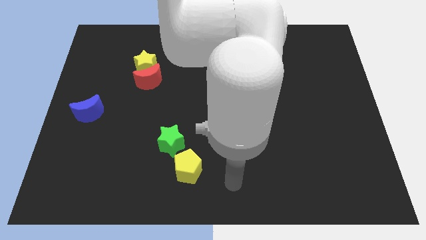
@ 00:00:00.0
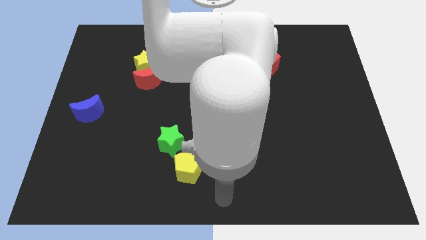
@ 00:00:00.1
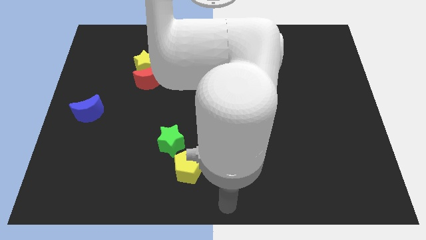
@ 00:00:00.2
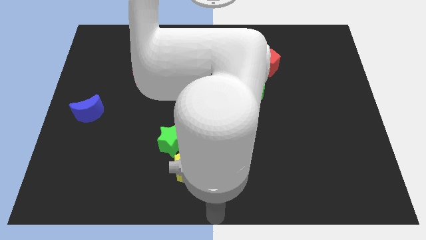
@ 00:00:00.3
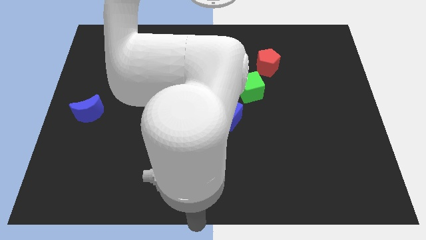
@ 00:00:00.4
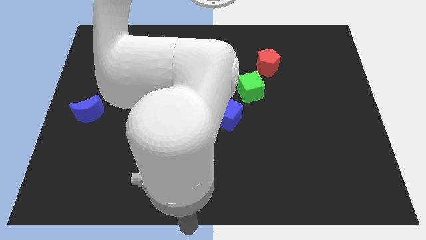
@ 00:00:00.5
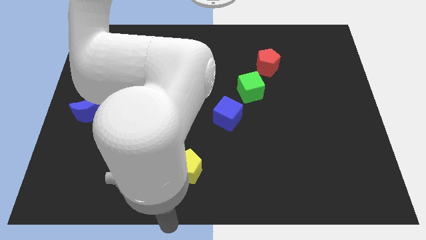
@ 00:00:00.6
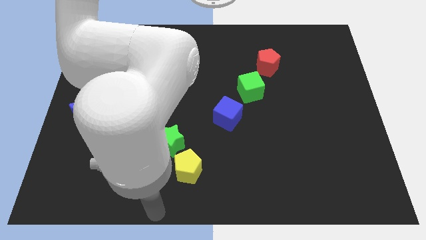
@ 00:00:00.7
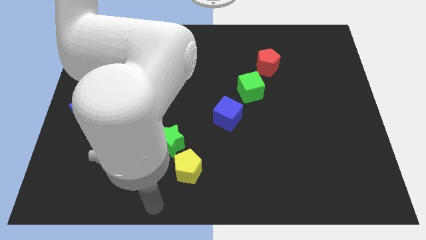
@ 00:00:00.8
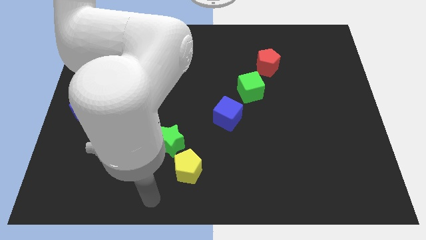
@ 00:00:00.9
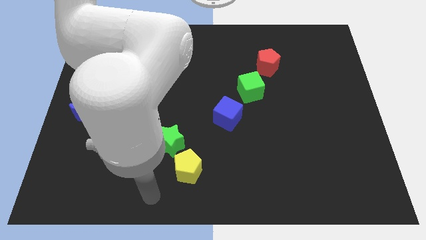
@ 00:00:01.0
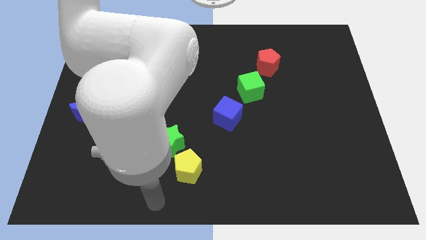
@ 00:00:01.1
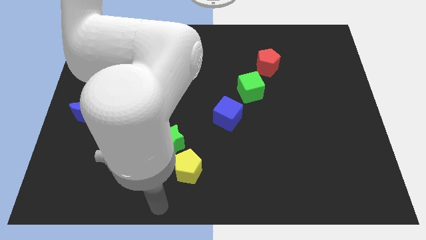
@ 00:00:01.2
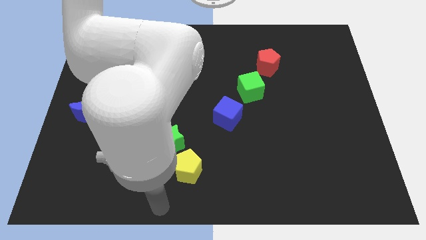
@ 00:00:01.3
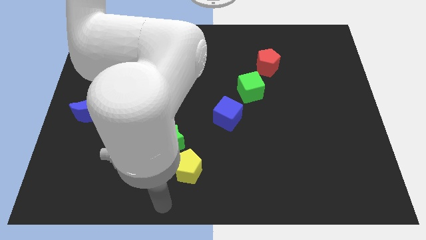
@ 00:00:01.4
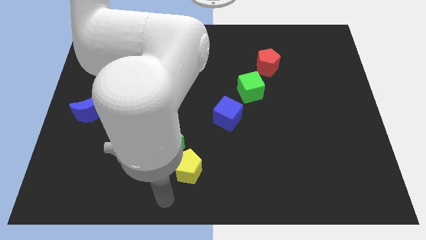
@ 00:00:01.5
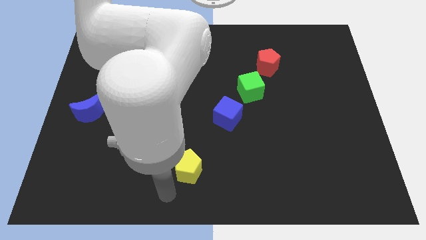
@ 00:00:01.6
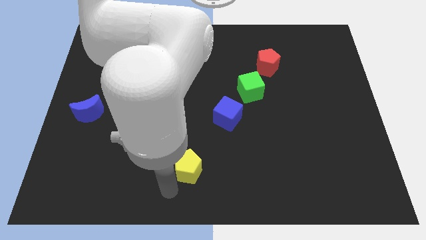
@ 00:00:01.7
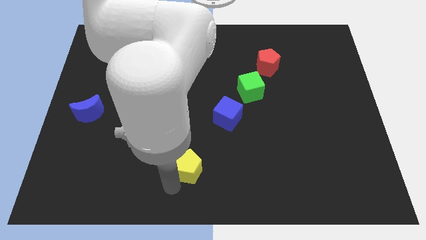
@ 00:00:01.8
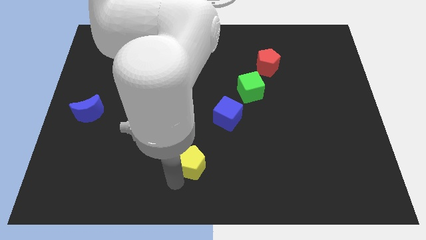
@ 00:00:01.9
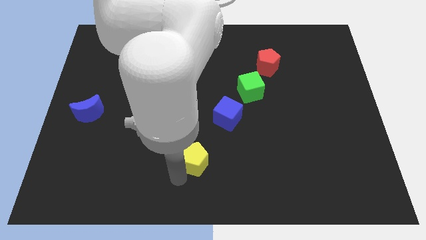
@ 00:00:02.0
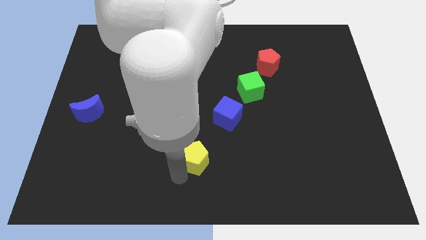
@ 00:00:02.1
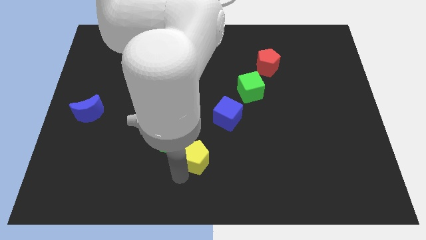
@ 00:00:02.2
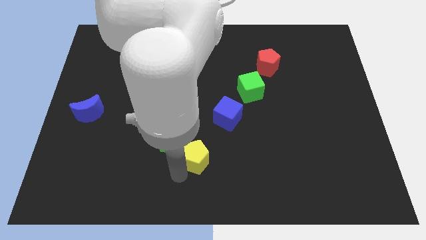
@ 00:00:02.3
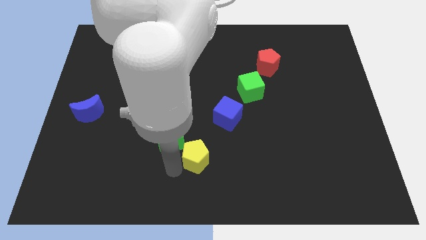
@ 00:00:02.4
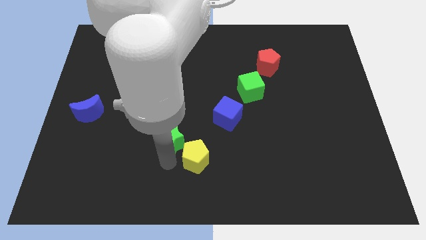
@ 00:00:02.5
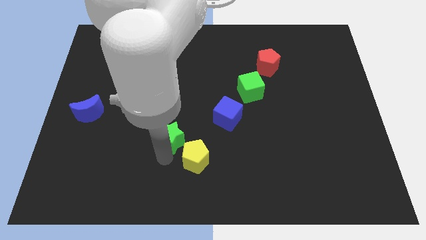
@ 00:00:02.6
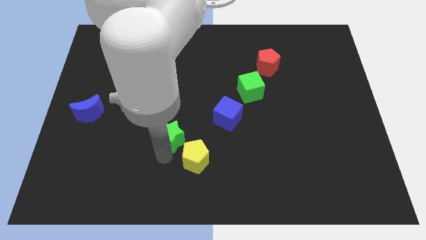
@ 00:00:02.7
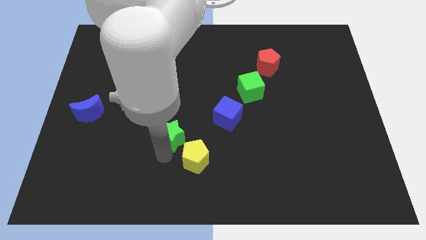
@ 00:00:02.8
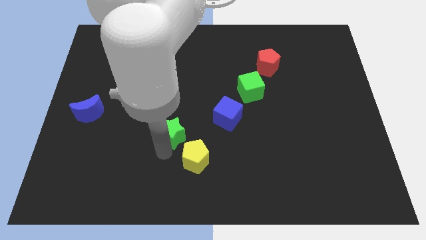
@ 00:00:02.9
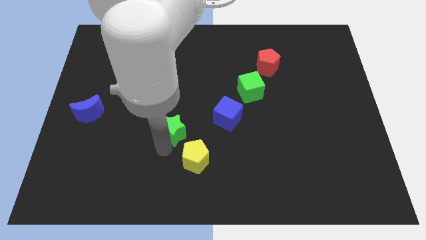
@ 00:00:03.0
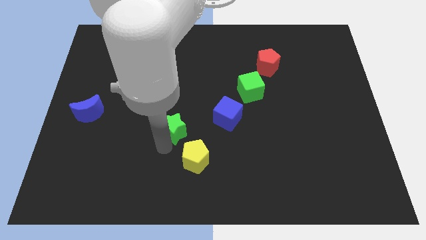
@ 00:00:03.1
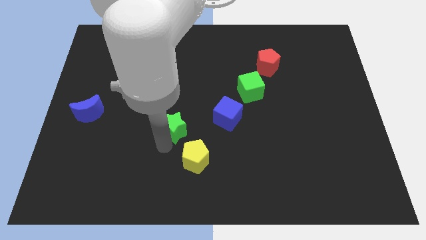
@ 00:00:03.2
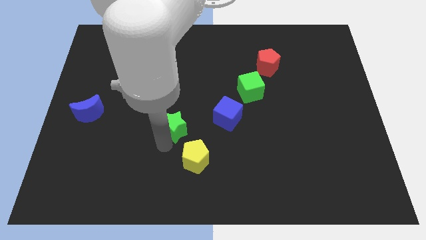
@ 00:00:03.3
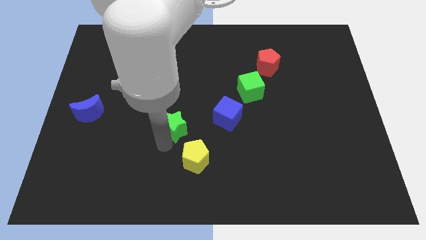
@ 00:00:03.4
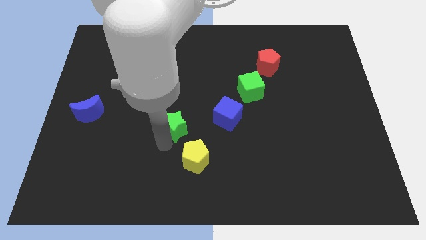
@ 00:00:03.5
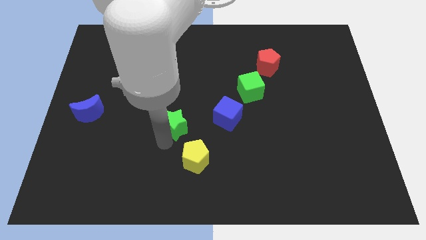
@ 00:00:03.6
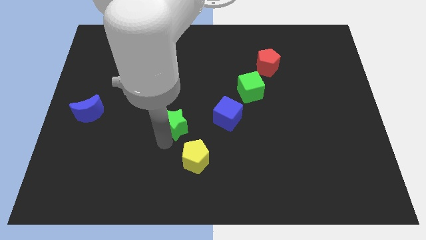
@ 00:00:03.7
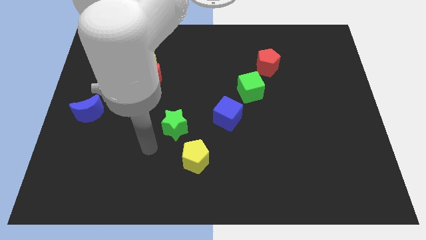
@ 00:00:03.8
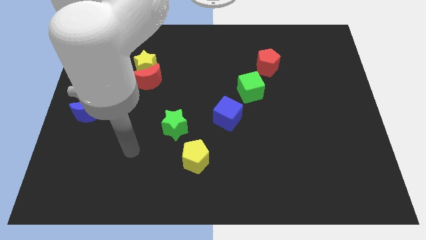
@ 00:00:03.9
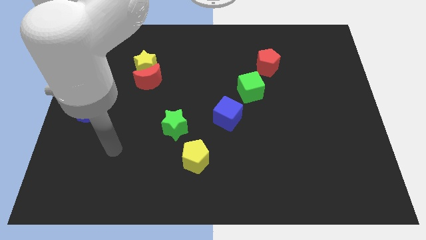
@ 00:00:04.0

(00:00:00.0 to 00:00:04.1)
push the yellow pentagon and green star towards the blue cube to form a diagnoal line

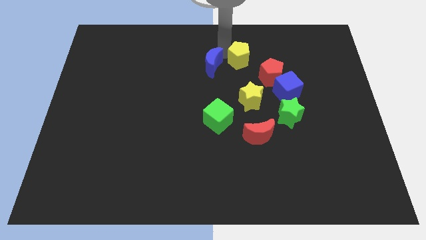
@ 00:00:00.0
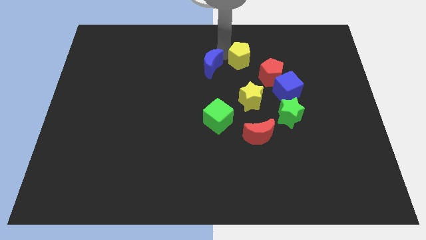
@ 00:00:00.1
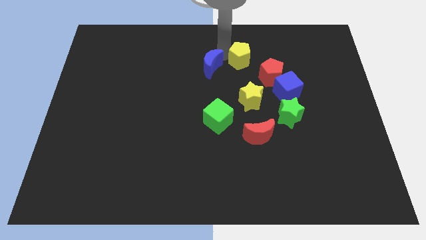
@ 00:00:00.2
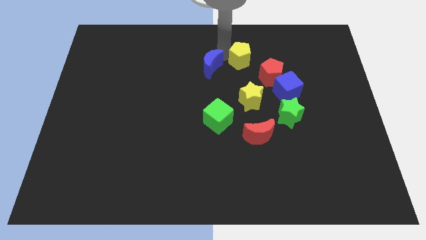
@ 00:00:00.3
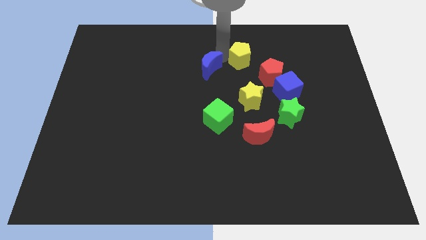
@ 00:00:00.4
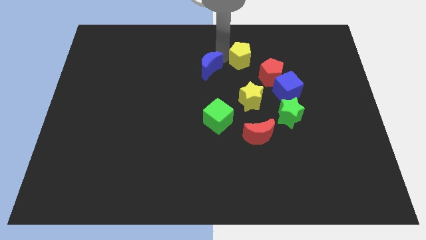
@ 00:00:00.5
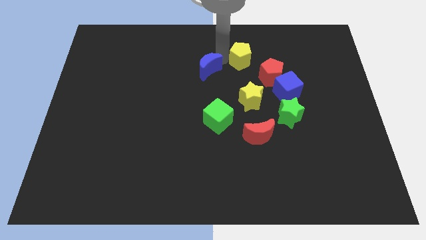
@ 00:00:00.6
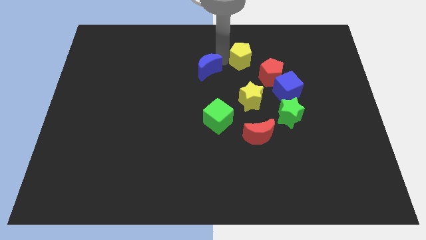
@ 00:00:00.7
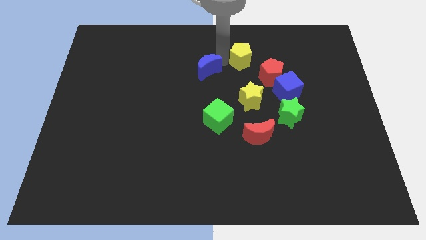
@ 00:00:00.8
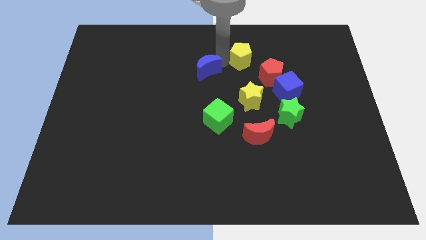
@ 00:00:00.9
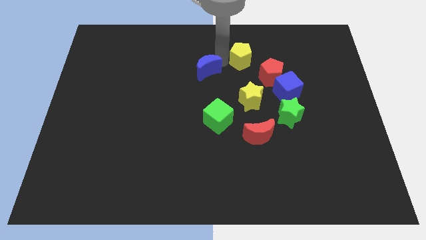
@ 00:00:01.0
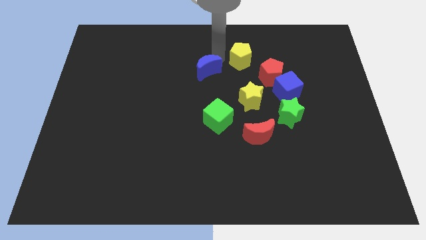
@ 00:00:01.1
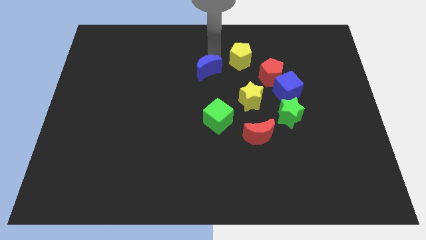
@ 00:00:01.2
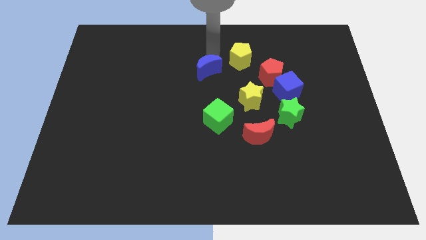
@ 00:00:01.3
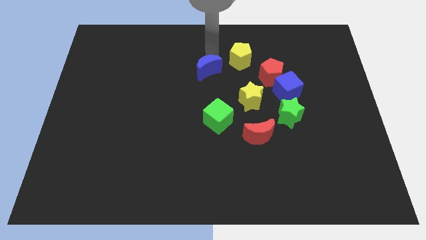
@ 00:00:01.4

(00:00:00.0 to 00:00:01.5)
separate the yellow pentagon and the blue moon

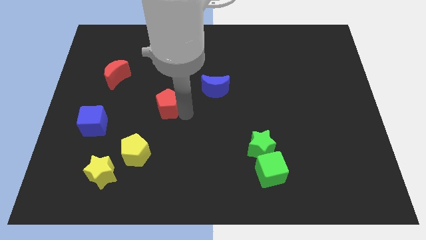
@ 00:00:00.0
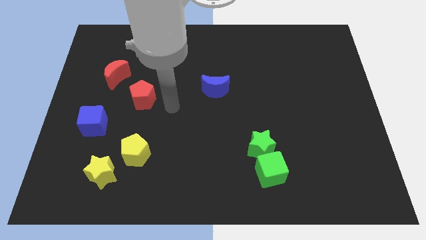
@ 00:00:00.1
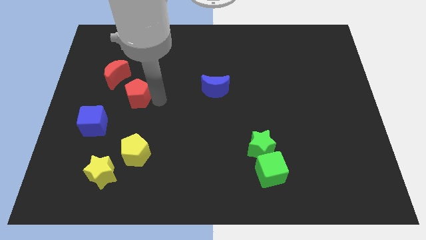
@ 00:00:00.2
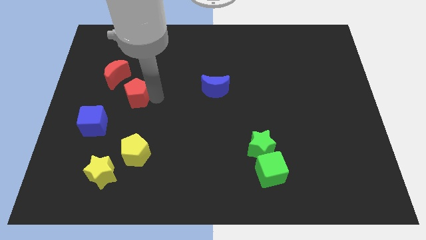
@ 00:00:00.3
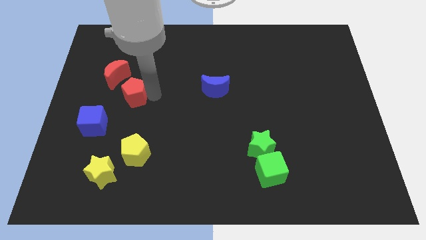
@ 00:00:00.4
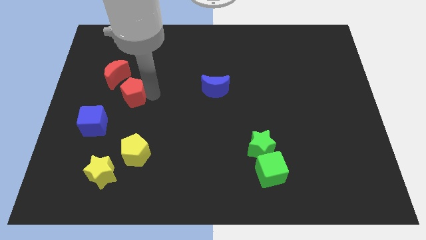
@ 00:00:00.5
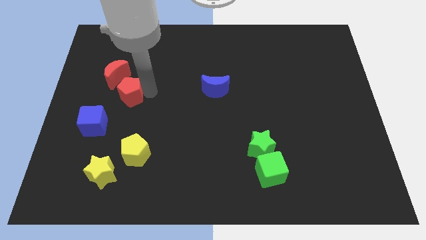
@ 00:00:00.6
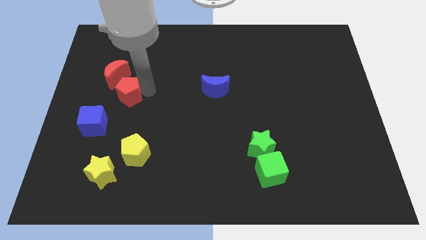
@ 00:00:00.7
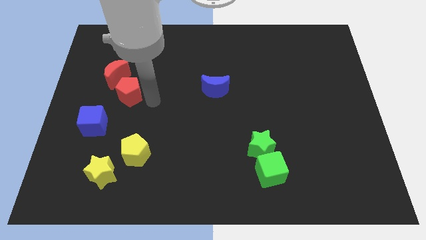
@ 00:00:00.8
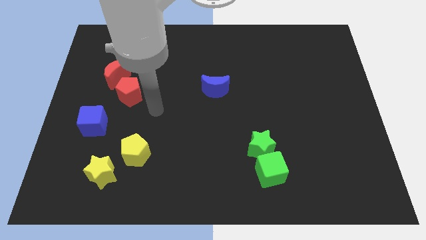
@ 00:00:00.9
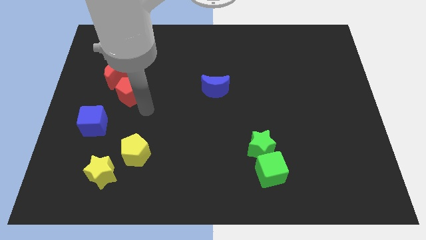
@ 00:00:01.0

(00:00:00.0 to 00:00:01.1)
place the red pentagon close to the red crescent

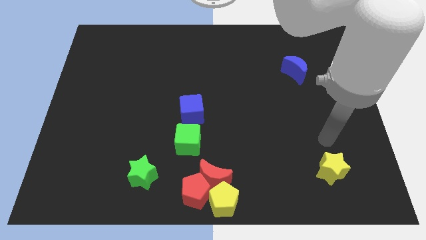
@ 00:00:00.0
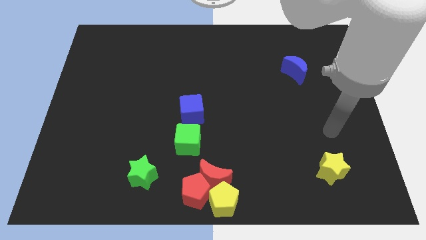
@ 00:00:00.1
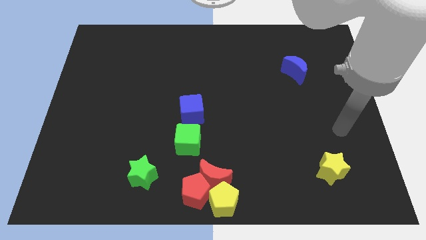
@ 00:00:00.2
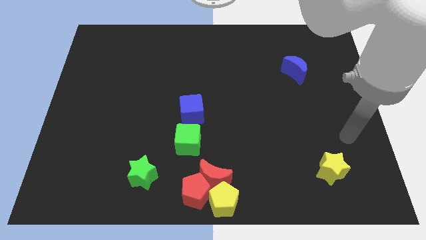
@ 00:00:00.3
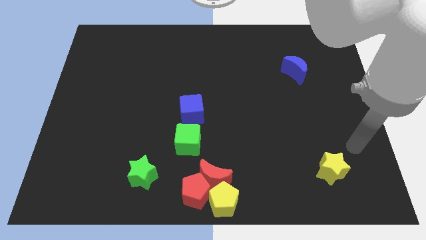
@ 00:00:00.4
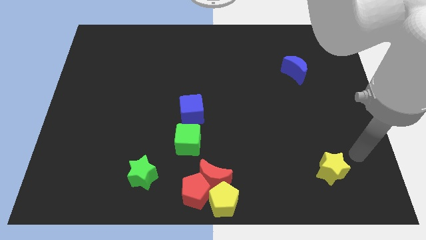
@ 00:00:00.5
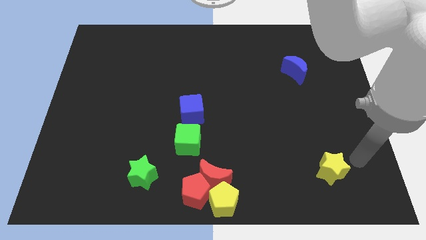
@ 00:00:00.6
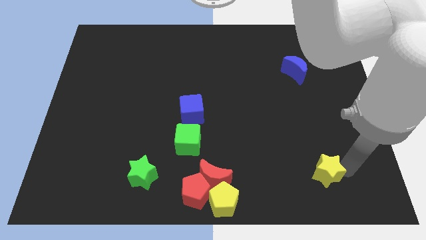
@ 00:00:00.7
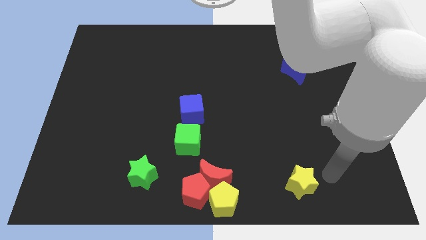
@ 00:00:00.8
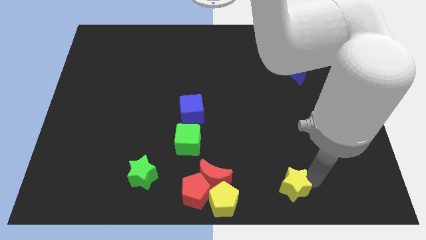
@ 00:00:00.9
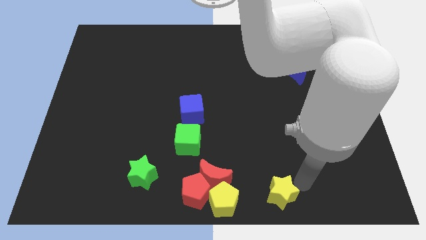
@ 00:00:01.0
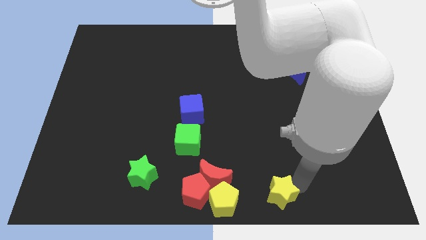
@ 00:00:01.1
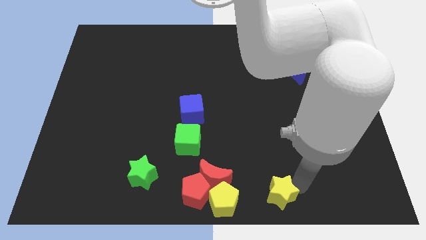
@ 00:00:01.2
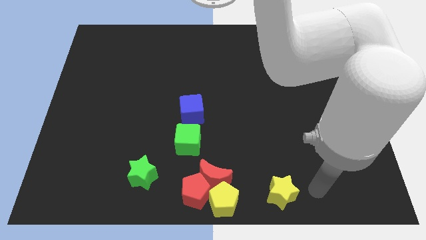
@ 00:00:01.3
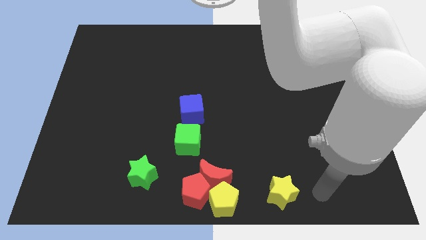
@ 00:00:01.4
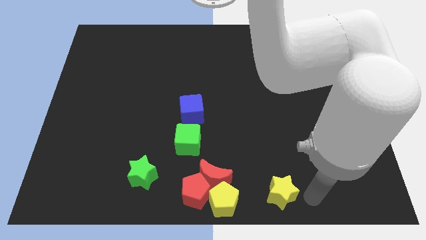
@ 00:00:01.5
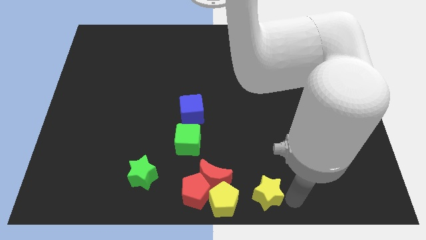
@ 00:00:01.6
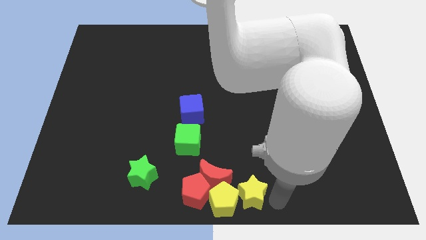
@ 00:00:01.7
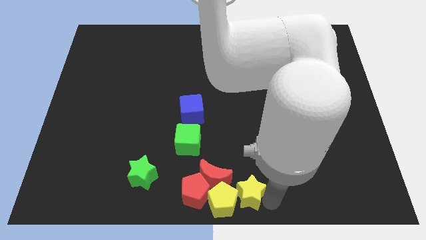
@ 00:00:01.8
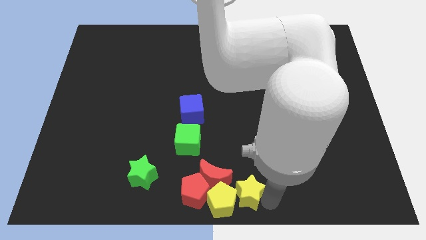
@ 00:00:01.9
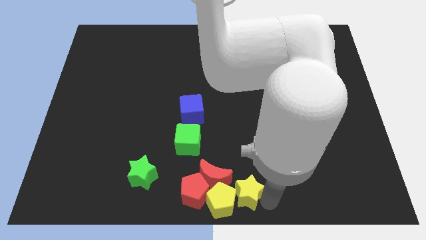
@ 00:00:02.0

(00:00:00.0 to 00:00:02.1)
push the yellow star towards the yellow pentagon

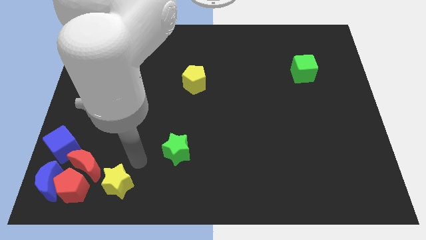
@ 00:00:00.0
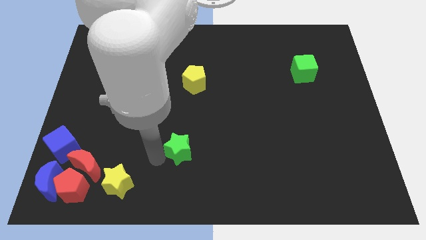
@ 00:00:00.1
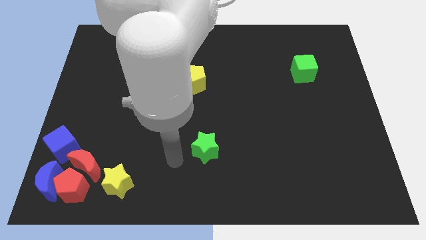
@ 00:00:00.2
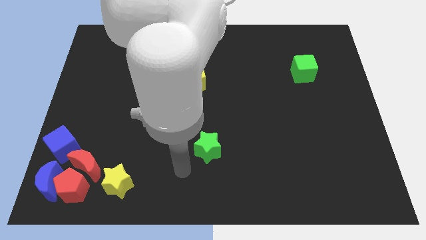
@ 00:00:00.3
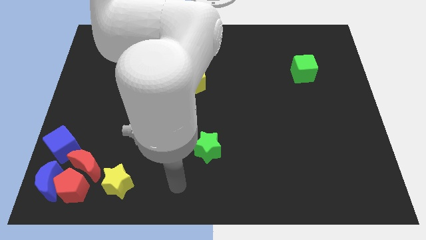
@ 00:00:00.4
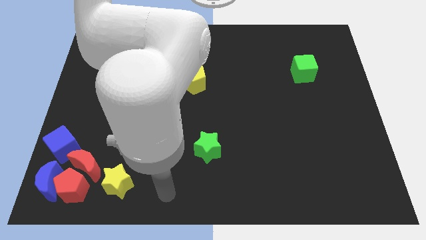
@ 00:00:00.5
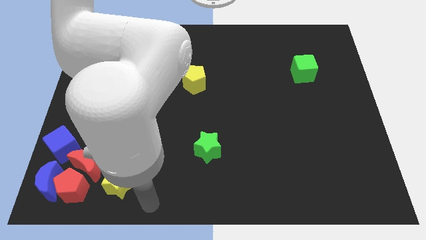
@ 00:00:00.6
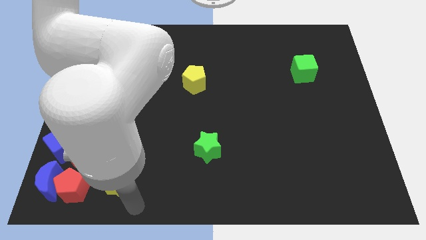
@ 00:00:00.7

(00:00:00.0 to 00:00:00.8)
push the green star to the right of the board
